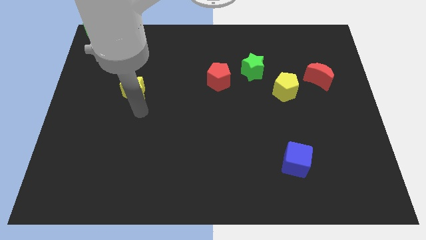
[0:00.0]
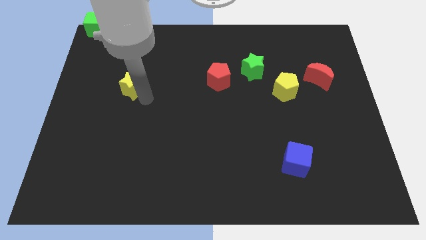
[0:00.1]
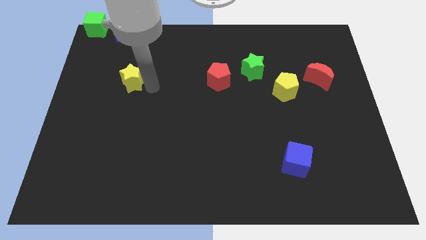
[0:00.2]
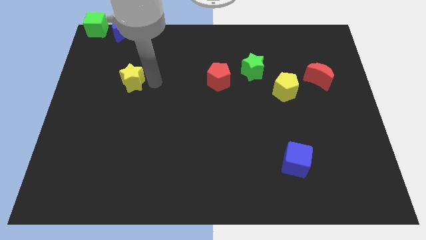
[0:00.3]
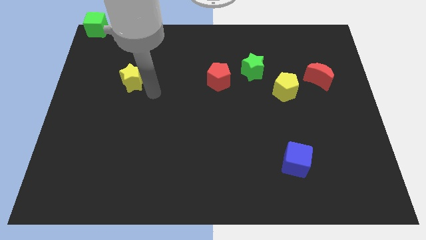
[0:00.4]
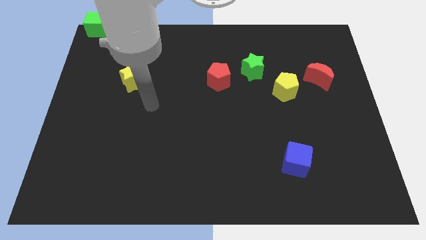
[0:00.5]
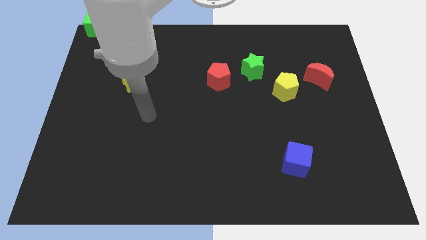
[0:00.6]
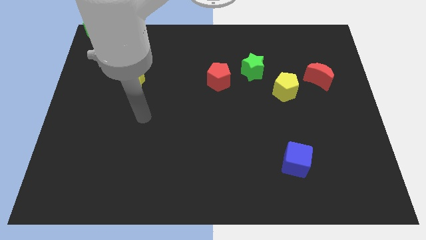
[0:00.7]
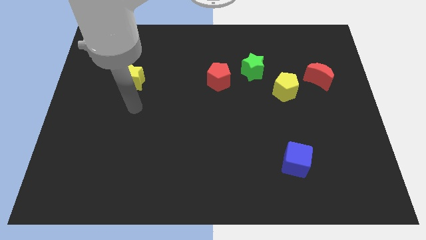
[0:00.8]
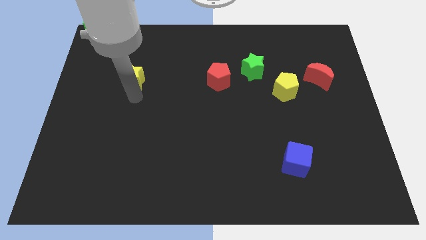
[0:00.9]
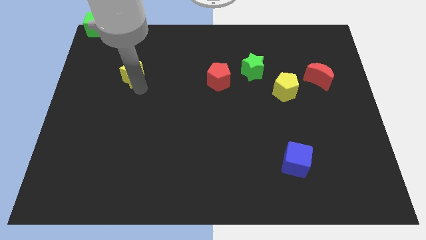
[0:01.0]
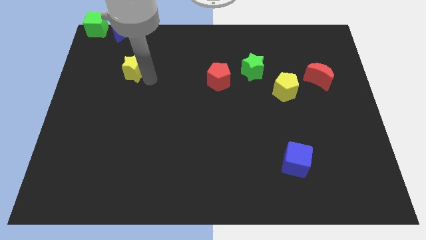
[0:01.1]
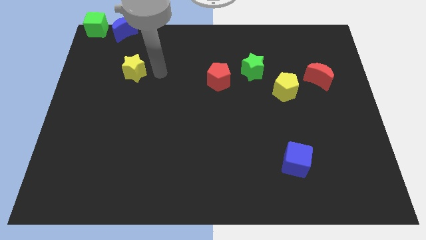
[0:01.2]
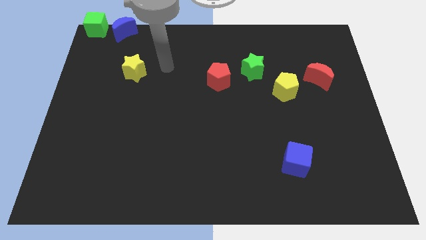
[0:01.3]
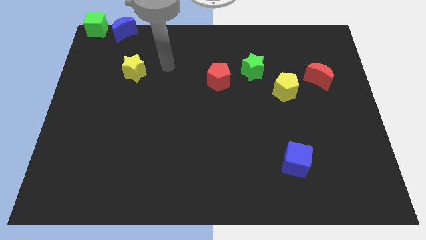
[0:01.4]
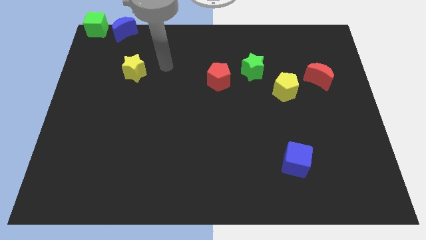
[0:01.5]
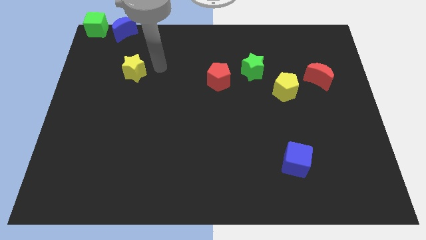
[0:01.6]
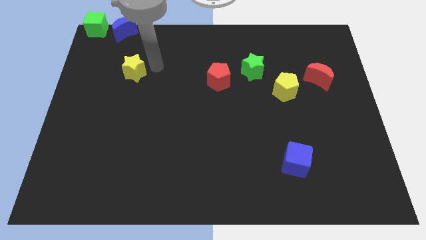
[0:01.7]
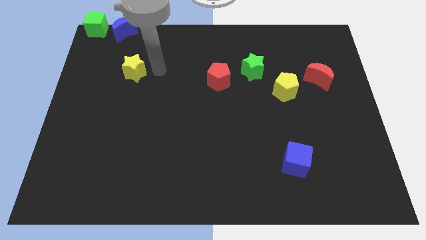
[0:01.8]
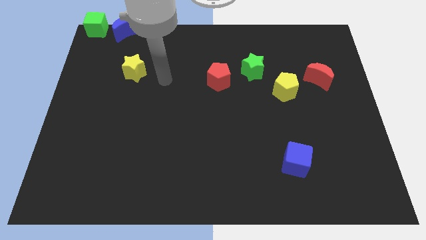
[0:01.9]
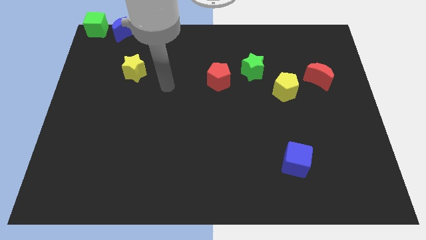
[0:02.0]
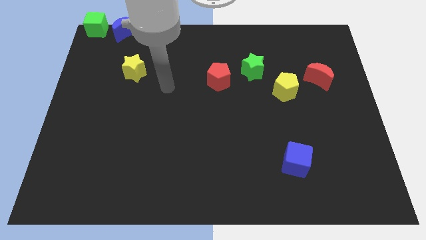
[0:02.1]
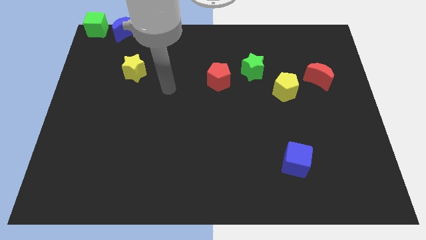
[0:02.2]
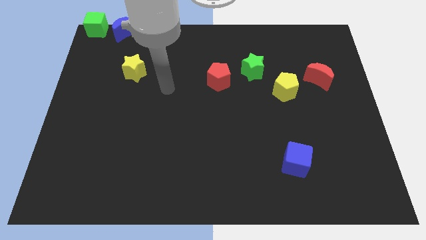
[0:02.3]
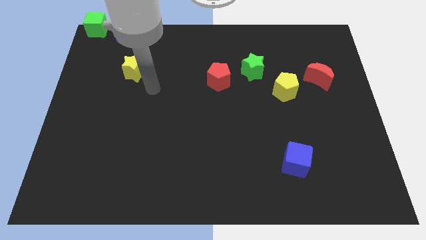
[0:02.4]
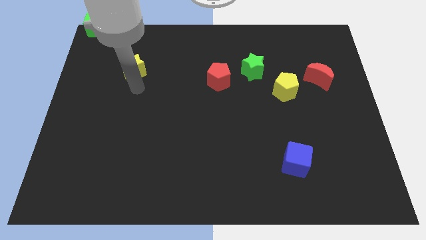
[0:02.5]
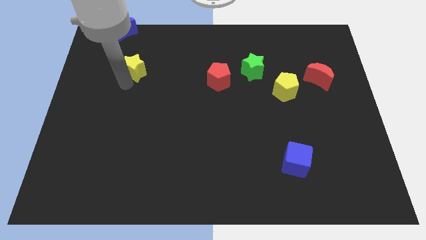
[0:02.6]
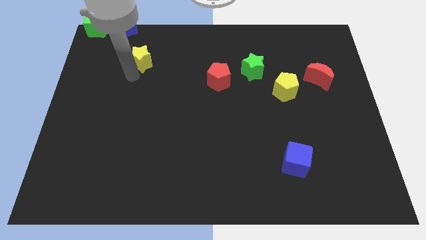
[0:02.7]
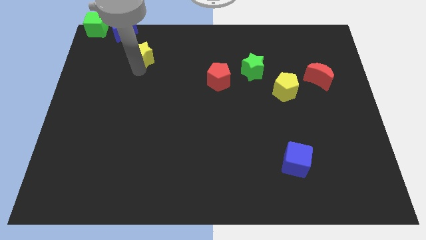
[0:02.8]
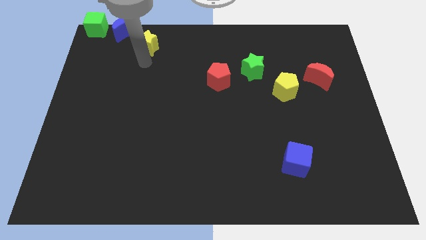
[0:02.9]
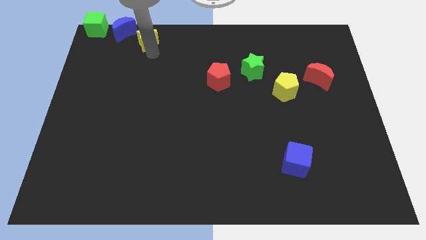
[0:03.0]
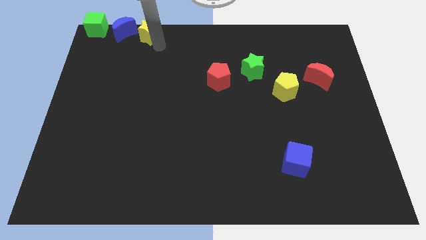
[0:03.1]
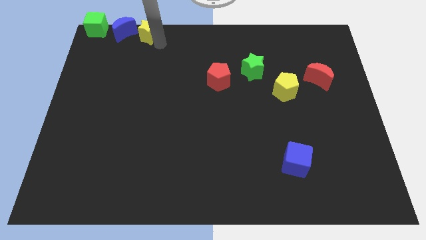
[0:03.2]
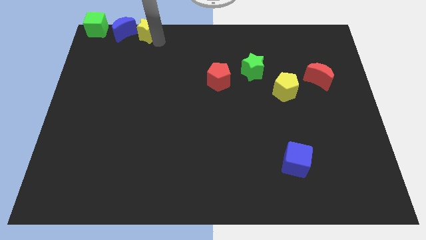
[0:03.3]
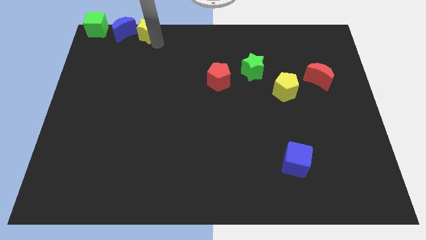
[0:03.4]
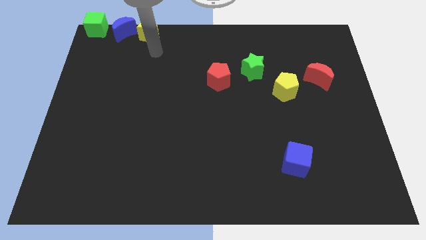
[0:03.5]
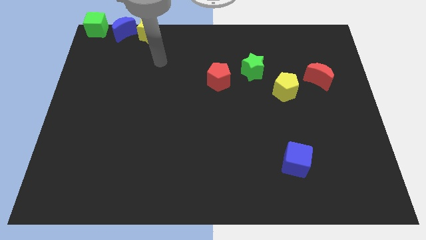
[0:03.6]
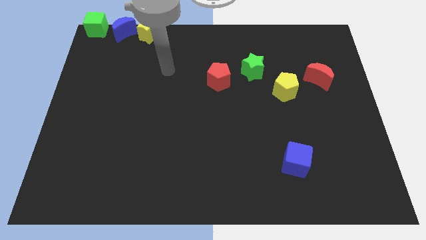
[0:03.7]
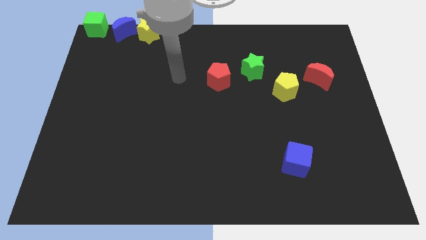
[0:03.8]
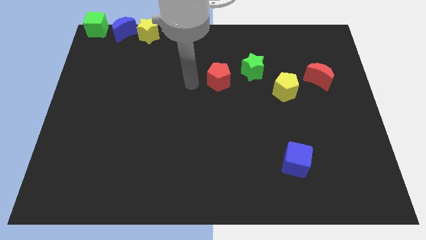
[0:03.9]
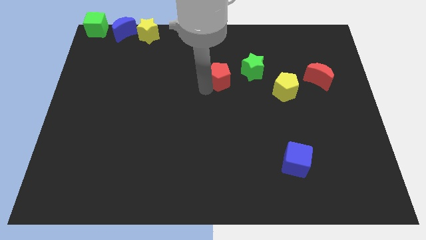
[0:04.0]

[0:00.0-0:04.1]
put the yellow star on the right side of the blue crescent

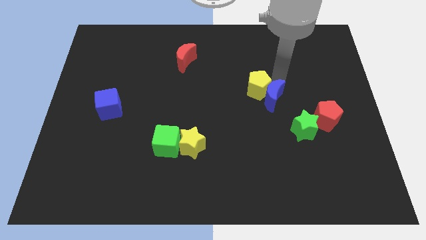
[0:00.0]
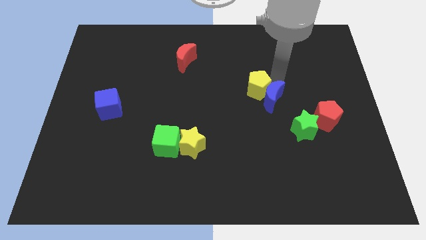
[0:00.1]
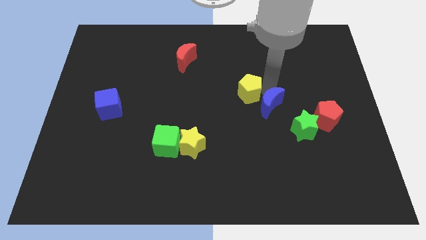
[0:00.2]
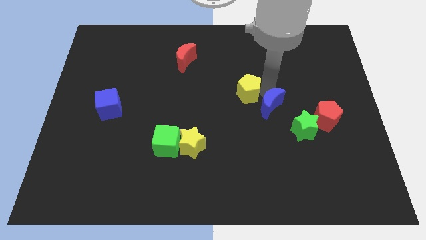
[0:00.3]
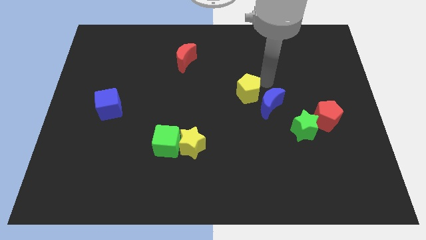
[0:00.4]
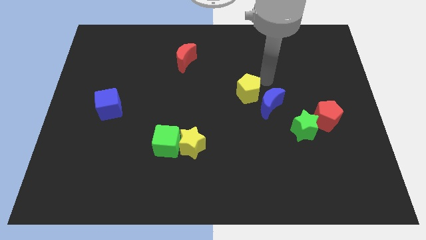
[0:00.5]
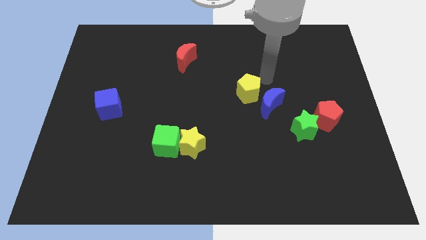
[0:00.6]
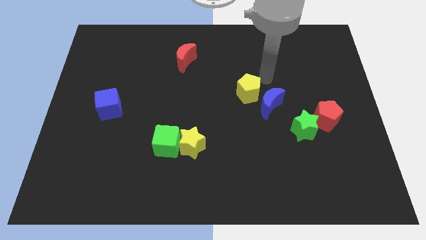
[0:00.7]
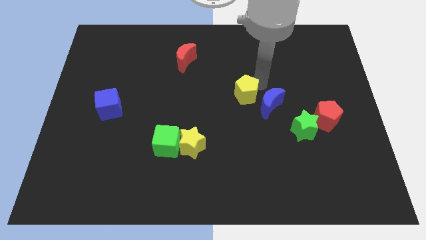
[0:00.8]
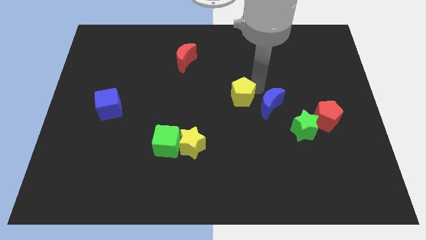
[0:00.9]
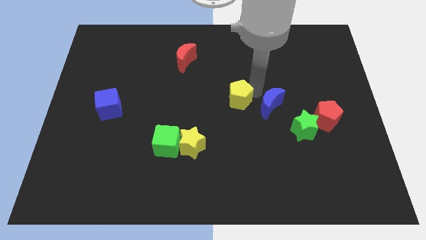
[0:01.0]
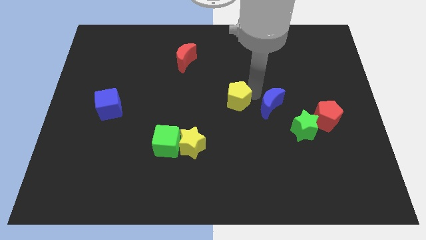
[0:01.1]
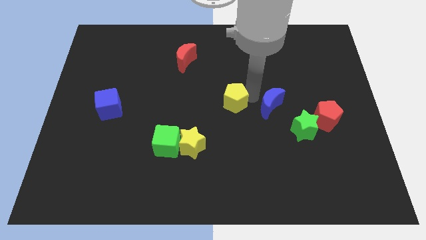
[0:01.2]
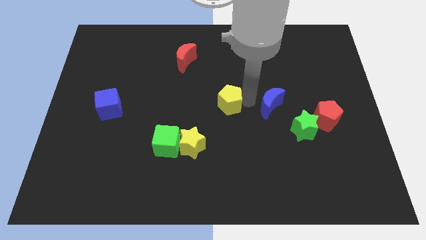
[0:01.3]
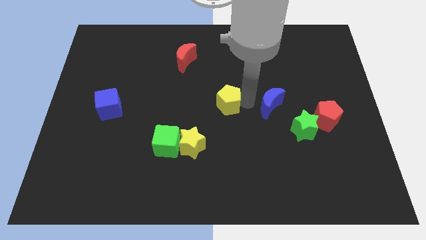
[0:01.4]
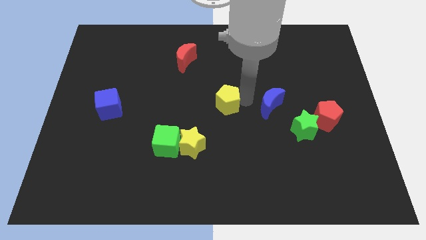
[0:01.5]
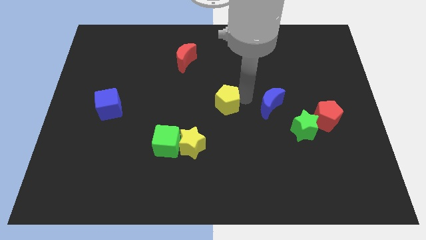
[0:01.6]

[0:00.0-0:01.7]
separate the yellow pentagon from the blue moon

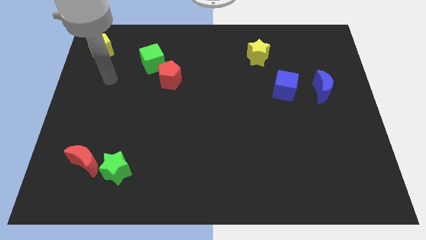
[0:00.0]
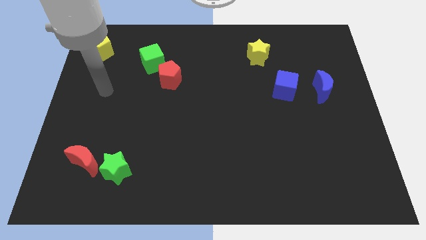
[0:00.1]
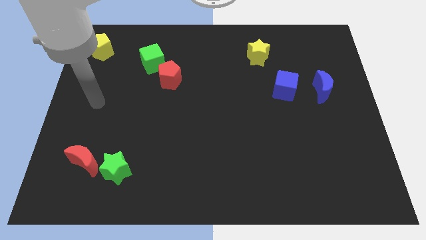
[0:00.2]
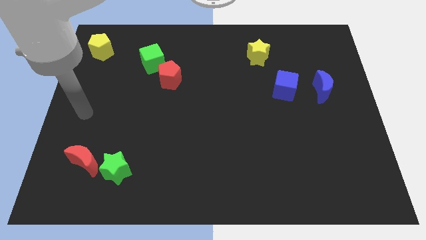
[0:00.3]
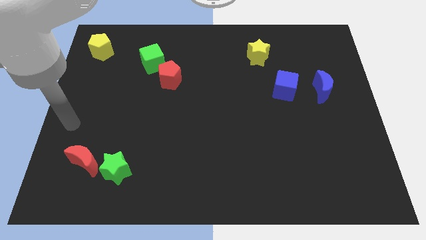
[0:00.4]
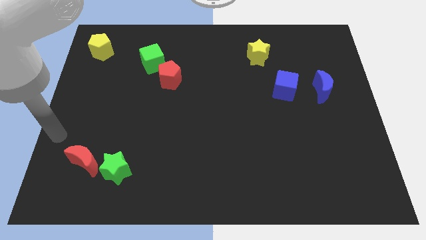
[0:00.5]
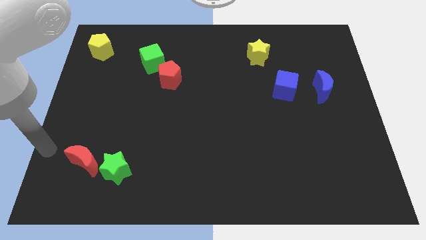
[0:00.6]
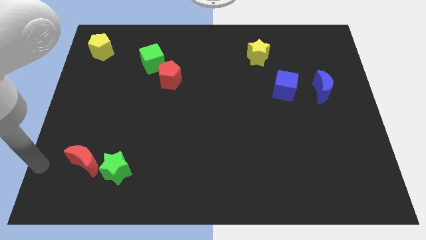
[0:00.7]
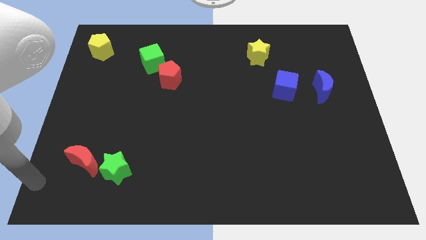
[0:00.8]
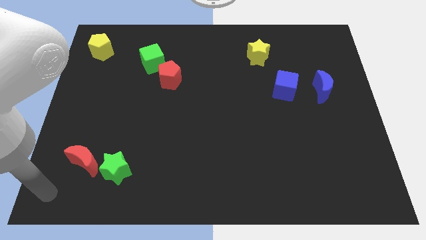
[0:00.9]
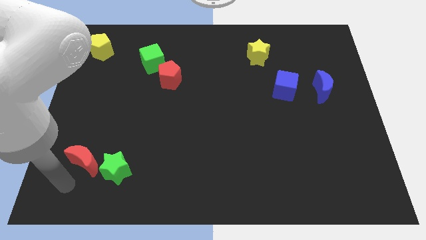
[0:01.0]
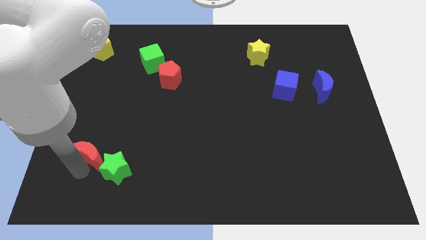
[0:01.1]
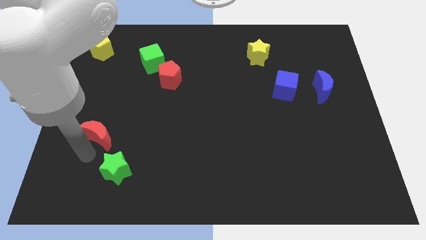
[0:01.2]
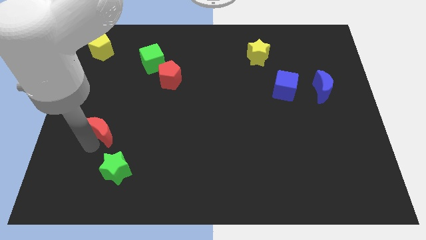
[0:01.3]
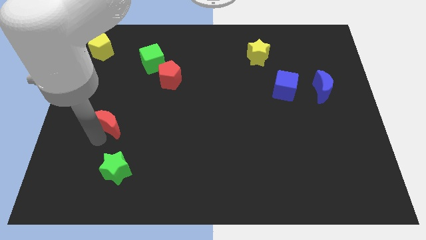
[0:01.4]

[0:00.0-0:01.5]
separate the red crescent from the green star

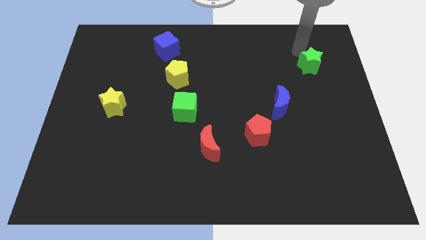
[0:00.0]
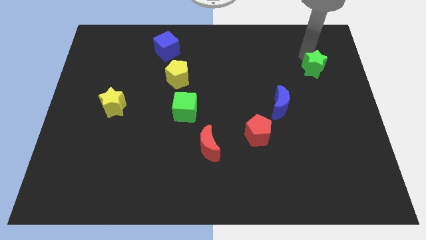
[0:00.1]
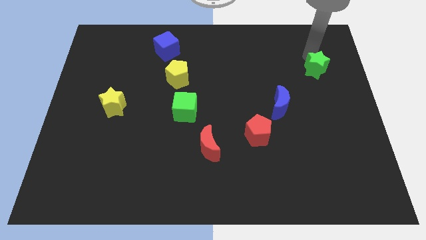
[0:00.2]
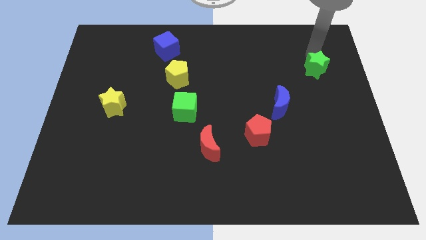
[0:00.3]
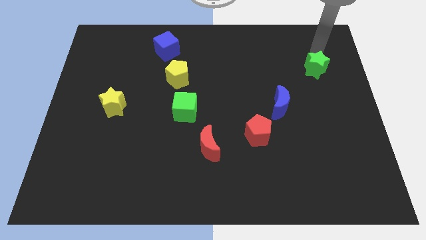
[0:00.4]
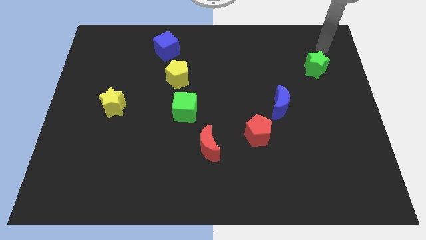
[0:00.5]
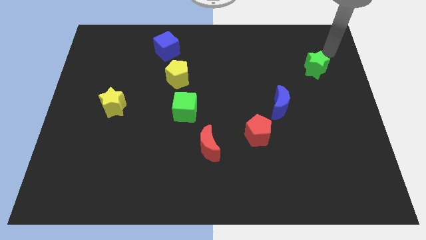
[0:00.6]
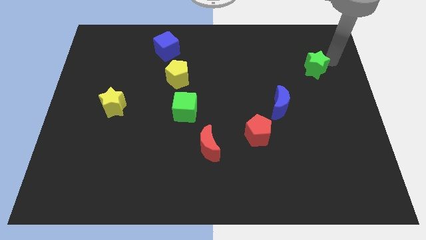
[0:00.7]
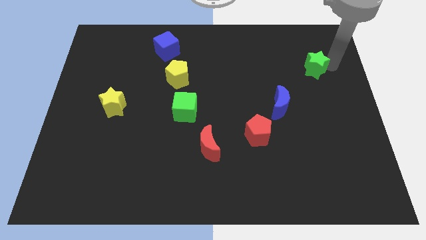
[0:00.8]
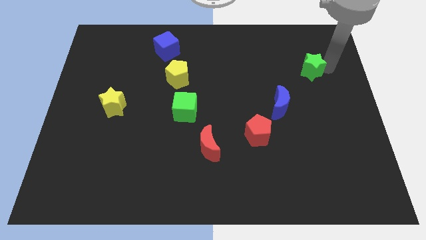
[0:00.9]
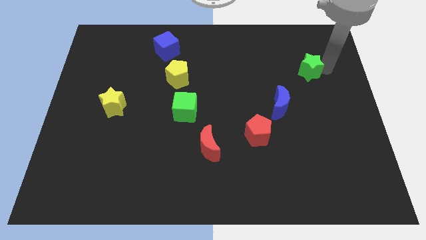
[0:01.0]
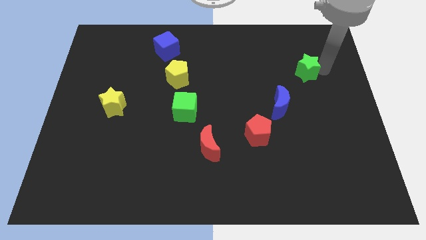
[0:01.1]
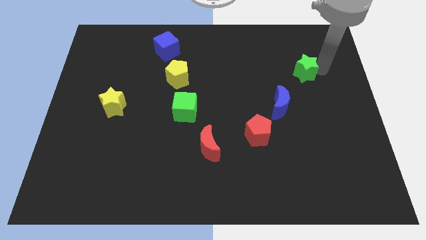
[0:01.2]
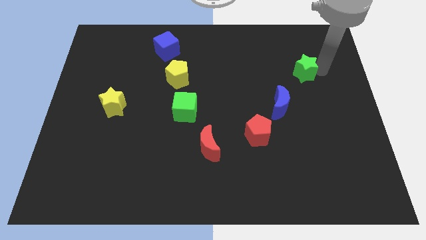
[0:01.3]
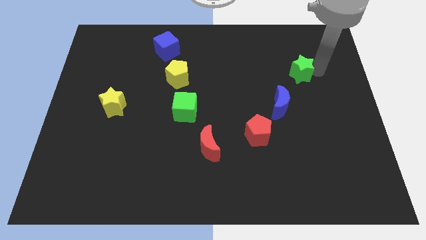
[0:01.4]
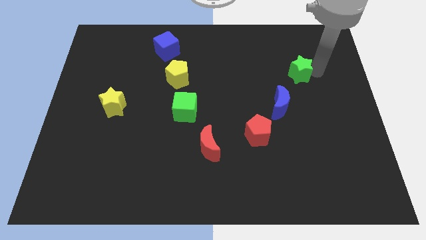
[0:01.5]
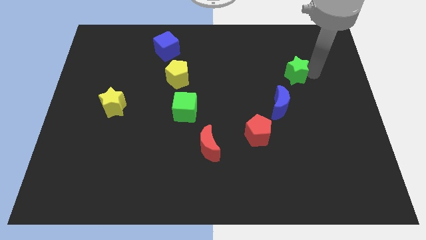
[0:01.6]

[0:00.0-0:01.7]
place green star in diagonal position with blue moon

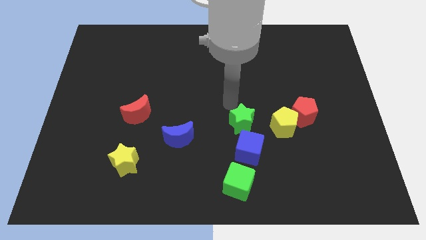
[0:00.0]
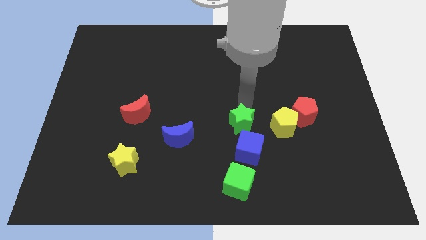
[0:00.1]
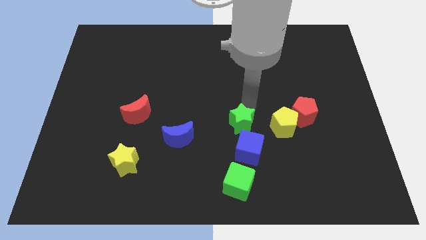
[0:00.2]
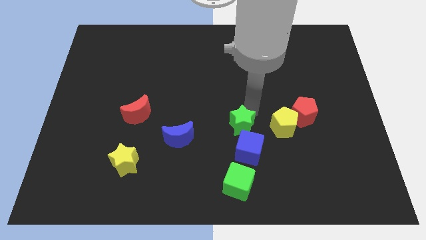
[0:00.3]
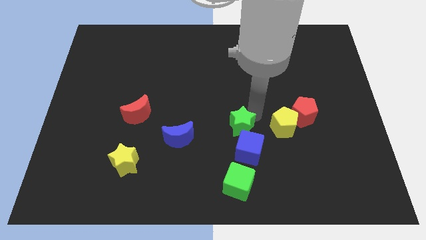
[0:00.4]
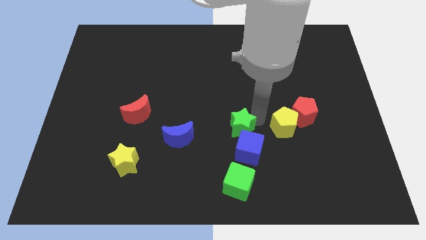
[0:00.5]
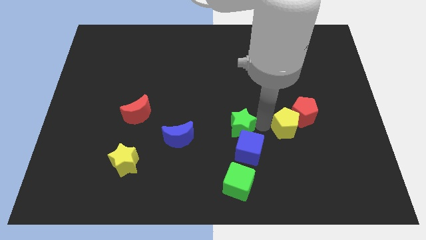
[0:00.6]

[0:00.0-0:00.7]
slightly push the green star to the left of the board
